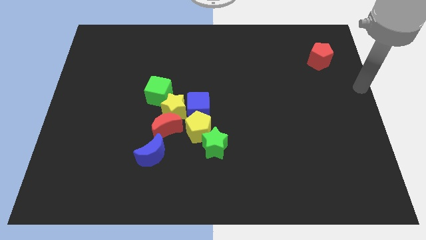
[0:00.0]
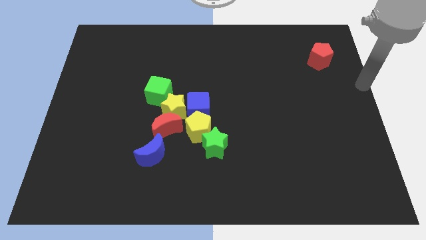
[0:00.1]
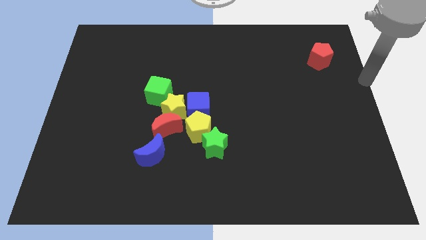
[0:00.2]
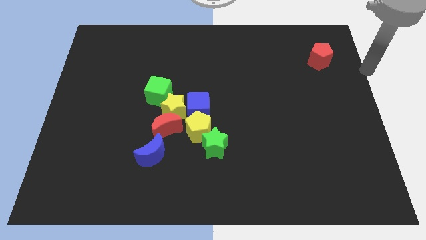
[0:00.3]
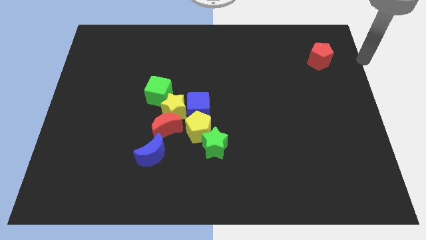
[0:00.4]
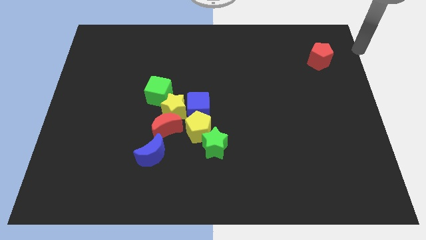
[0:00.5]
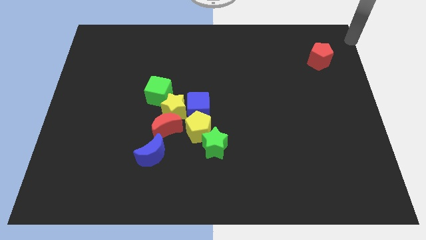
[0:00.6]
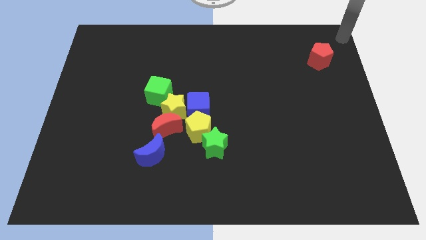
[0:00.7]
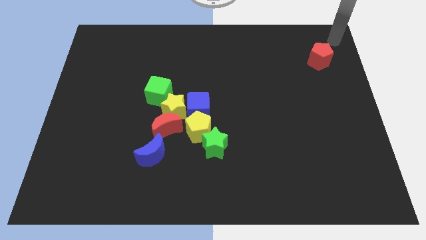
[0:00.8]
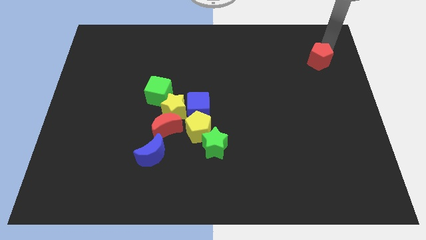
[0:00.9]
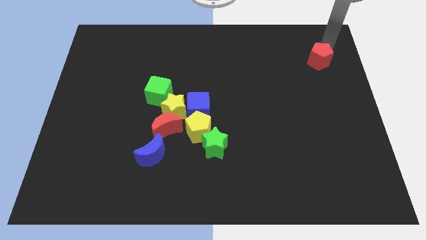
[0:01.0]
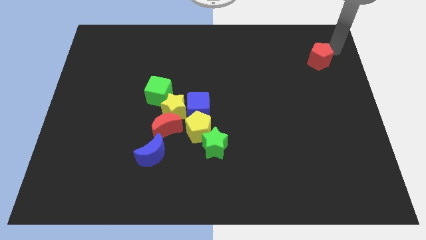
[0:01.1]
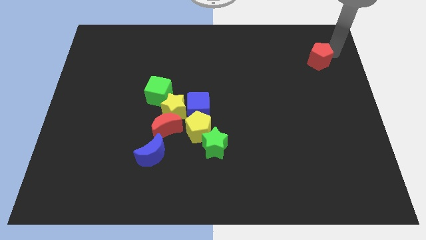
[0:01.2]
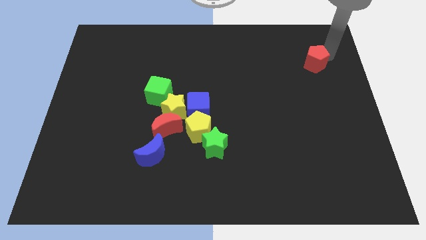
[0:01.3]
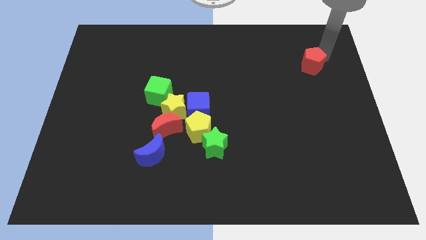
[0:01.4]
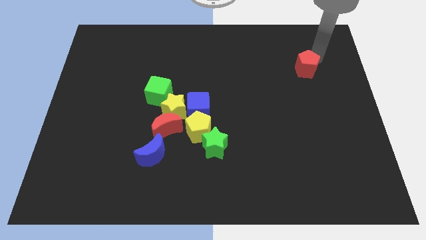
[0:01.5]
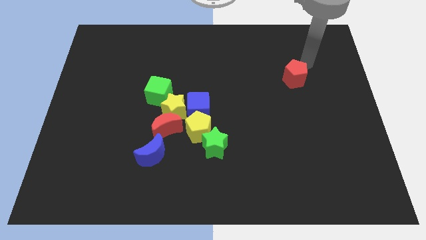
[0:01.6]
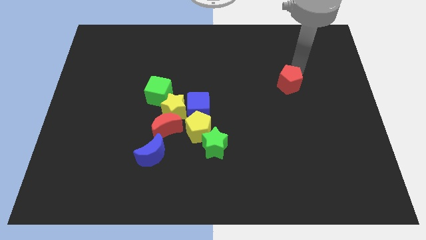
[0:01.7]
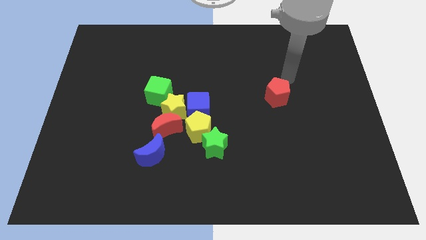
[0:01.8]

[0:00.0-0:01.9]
move the red pentagon towards the other blocks

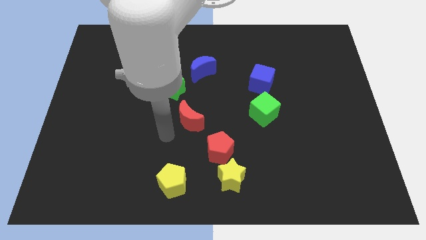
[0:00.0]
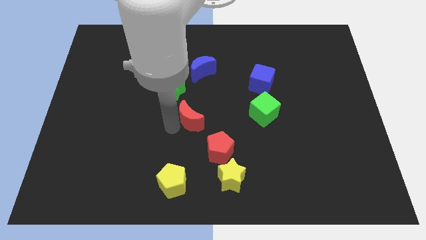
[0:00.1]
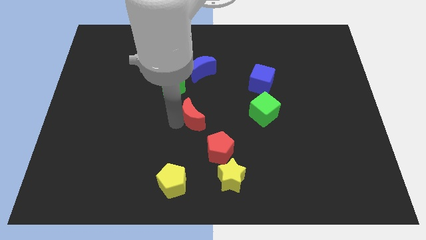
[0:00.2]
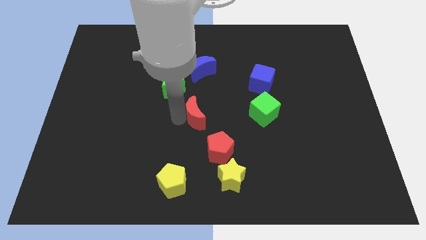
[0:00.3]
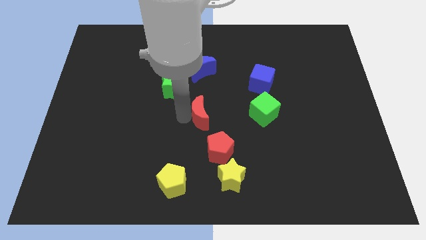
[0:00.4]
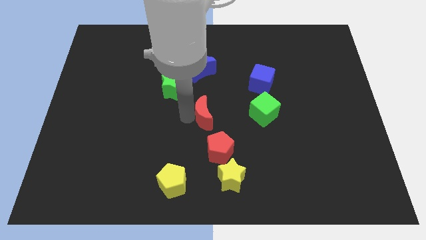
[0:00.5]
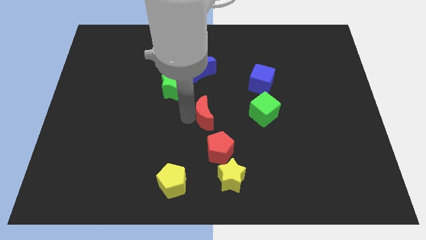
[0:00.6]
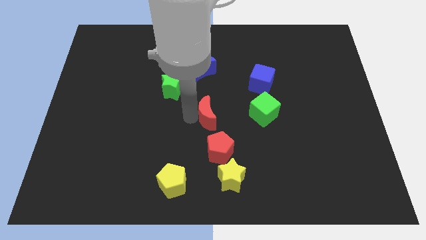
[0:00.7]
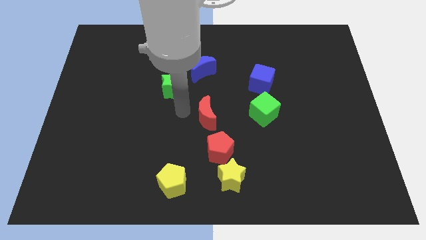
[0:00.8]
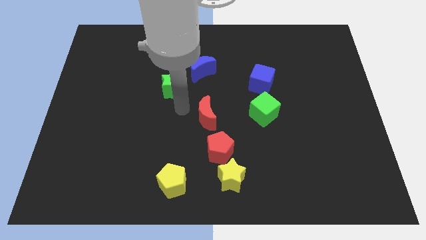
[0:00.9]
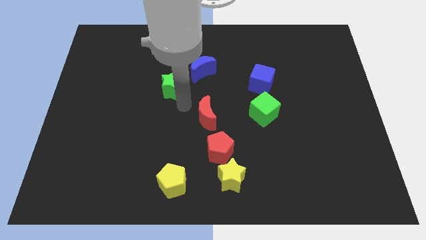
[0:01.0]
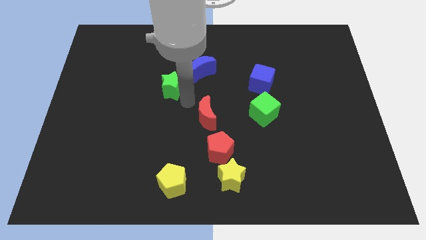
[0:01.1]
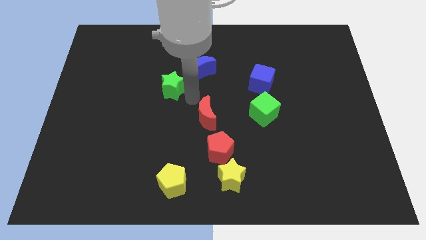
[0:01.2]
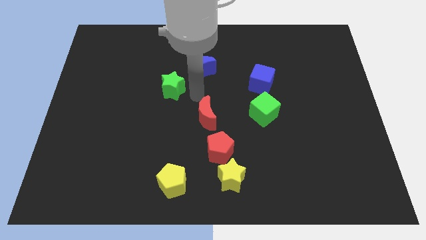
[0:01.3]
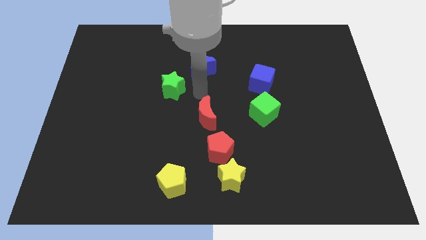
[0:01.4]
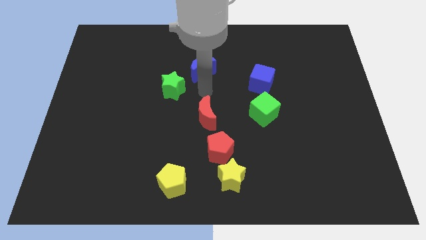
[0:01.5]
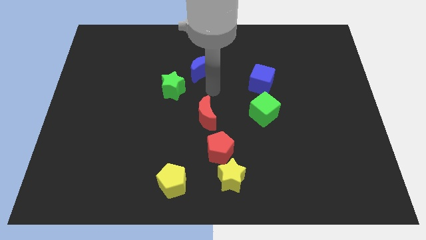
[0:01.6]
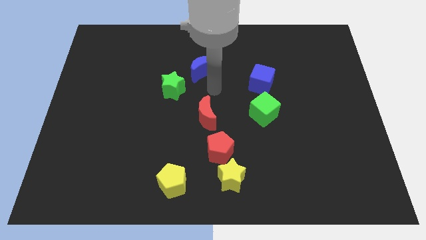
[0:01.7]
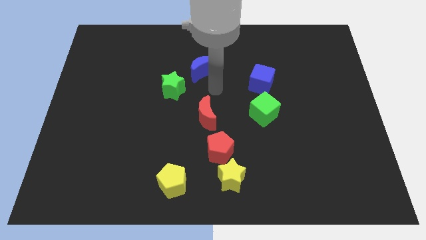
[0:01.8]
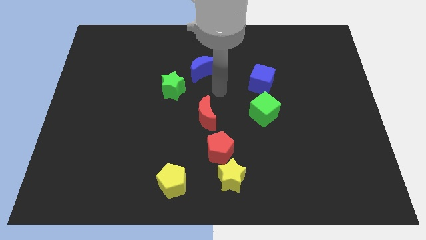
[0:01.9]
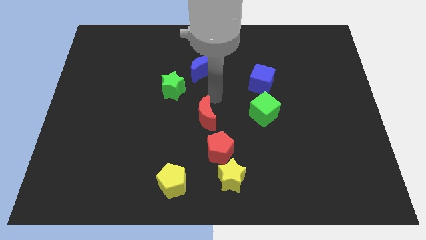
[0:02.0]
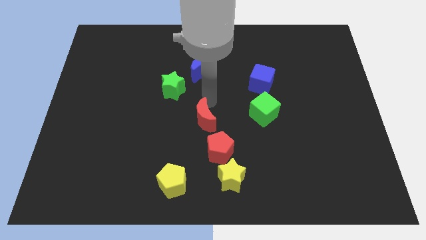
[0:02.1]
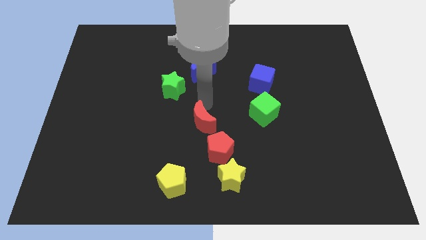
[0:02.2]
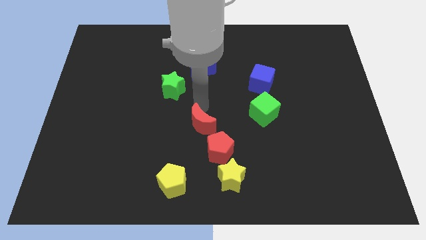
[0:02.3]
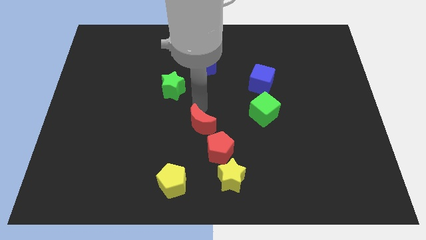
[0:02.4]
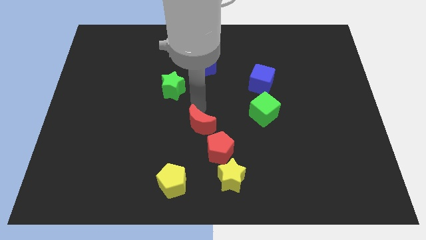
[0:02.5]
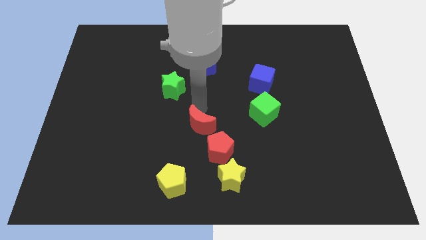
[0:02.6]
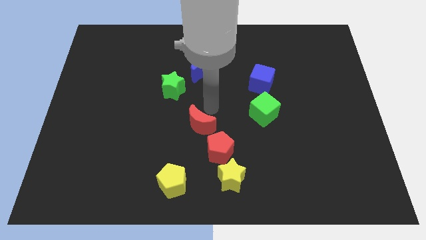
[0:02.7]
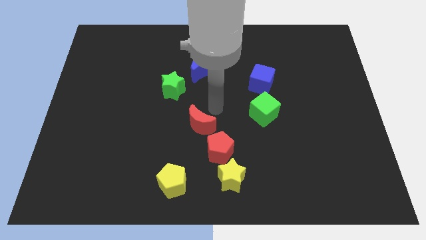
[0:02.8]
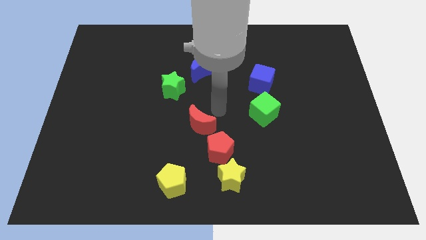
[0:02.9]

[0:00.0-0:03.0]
place the red crescent close to red pentagon

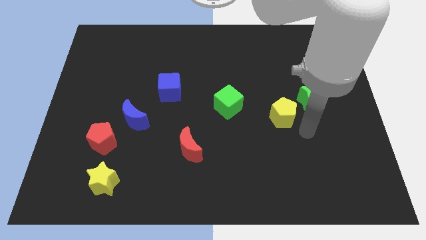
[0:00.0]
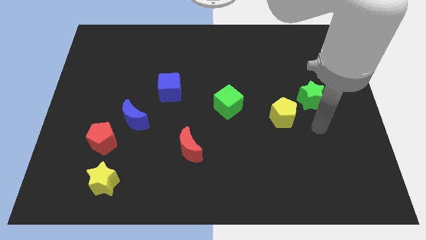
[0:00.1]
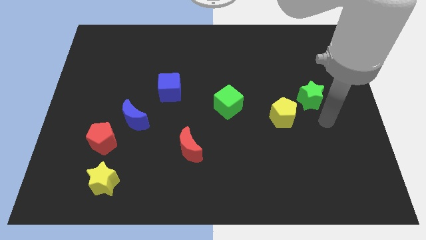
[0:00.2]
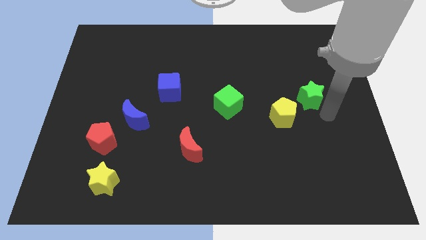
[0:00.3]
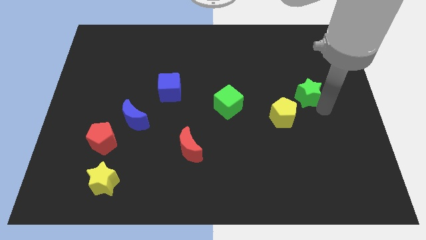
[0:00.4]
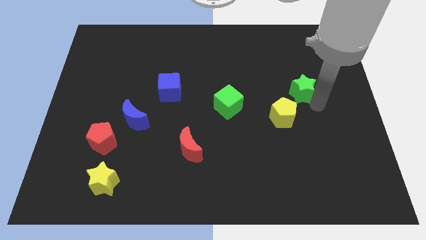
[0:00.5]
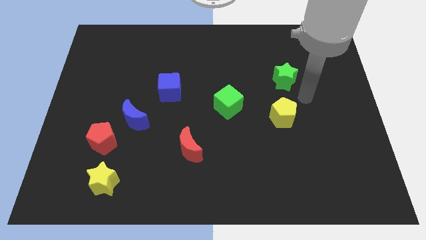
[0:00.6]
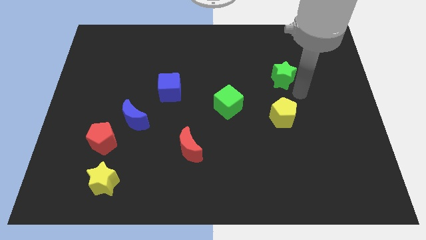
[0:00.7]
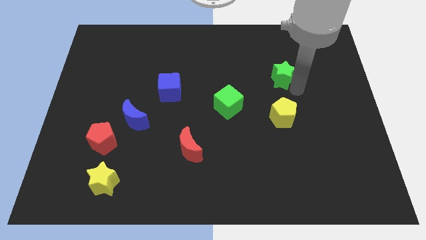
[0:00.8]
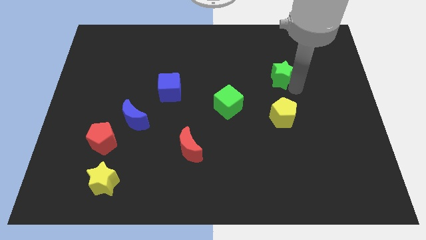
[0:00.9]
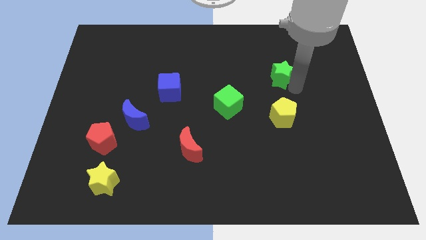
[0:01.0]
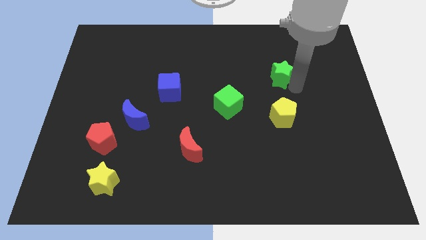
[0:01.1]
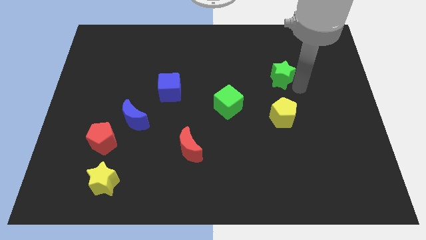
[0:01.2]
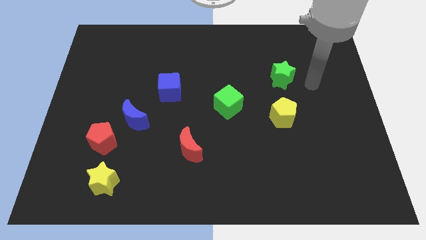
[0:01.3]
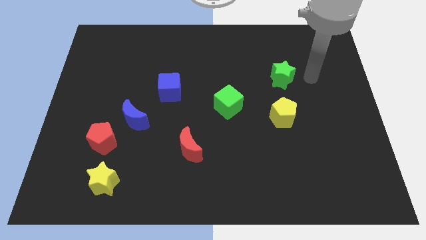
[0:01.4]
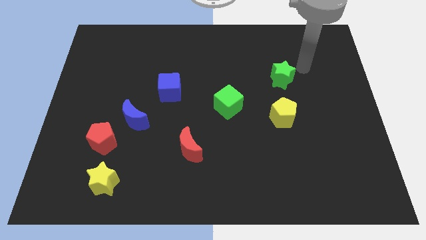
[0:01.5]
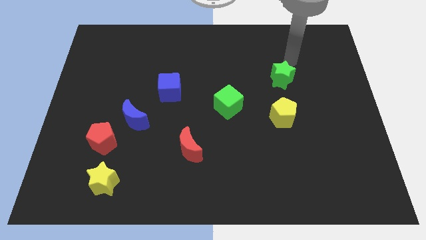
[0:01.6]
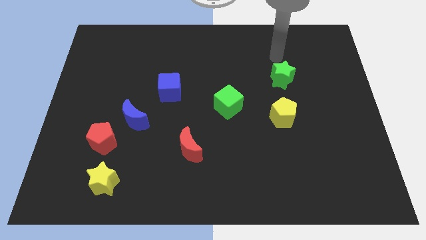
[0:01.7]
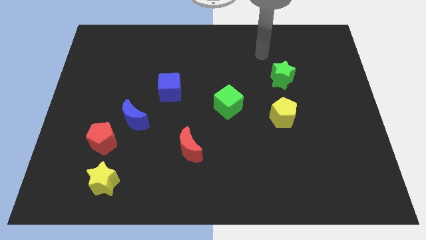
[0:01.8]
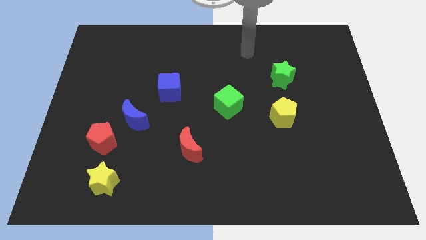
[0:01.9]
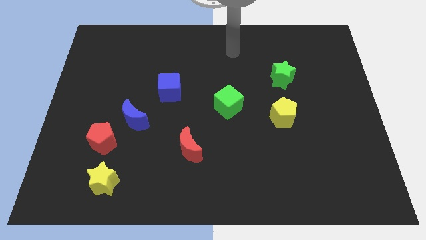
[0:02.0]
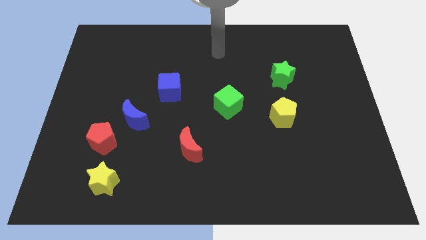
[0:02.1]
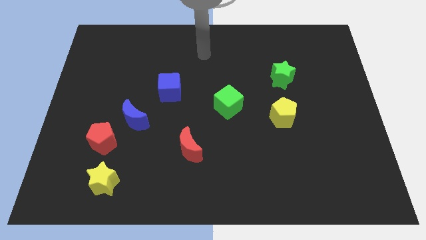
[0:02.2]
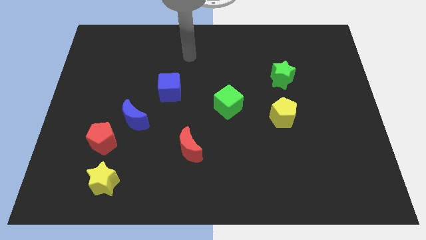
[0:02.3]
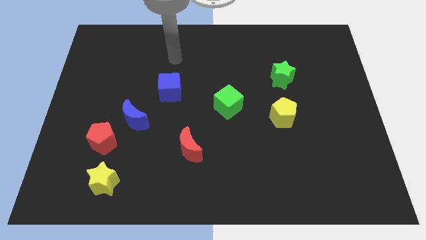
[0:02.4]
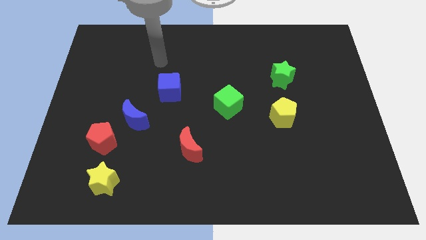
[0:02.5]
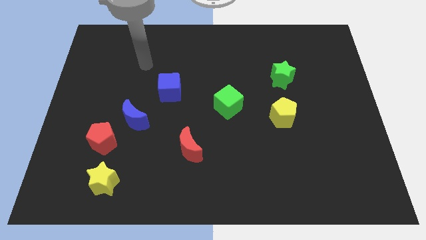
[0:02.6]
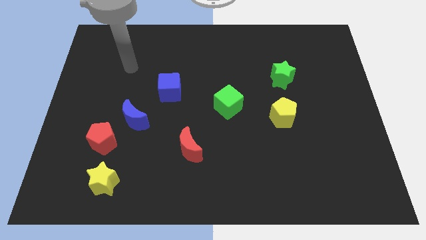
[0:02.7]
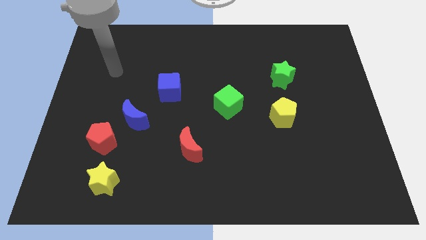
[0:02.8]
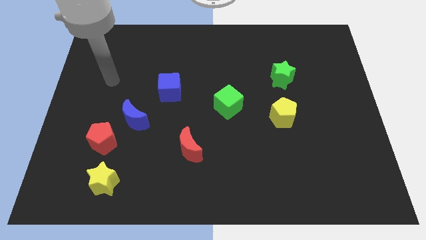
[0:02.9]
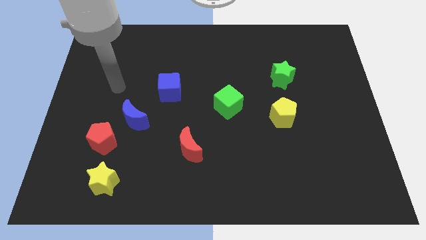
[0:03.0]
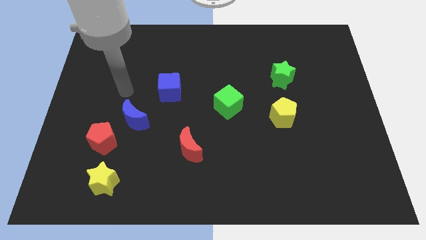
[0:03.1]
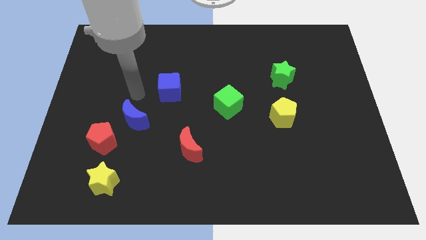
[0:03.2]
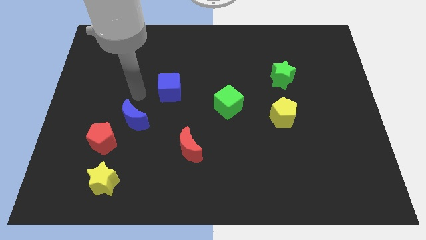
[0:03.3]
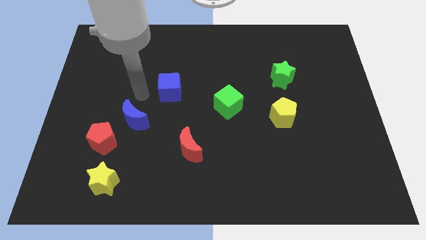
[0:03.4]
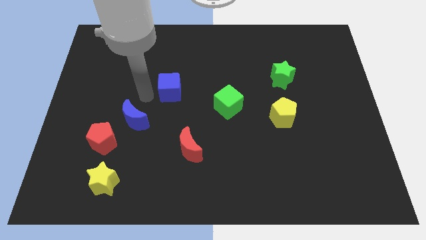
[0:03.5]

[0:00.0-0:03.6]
push the green star to the vertical top side of the yellow pentagon

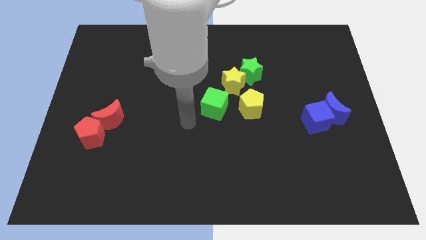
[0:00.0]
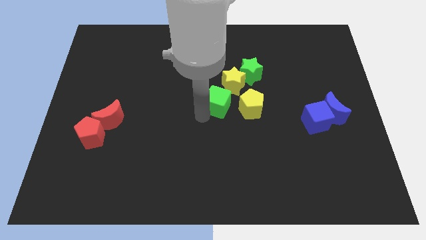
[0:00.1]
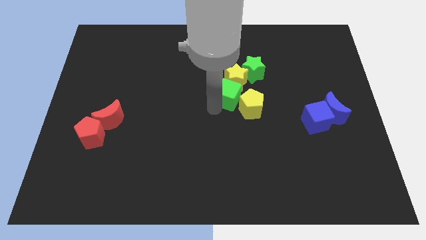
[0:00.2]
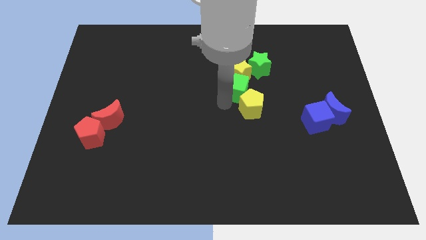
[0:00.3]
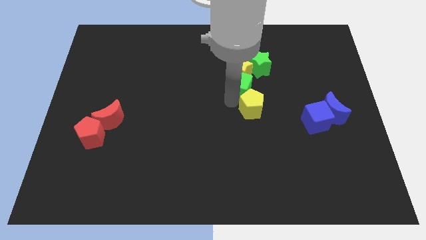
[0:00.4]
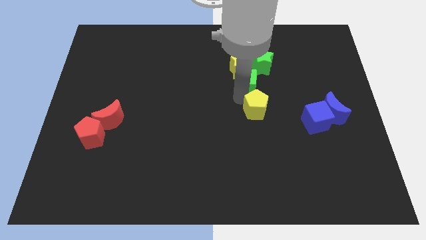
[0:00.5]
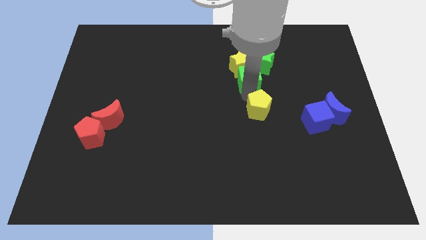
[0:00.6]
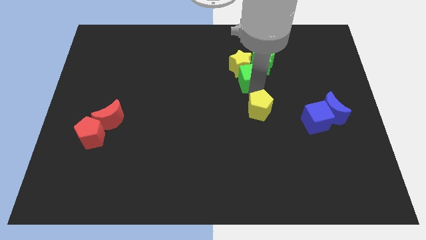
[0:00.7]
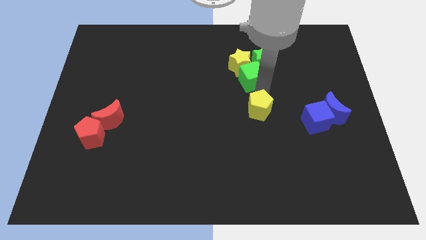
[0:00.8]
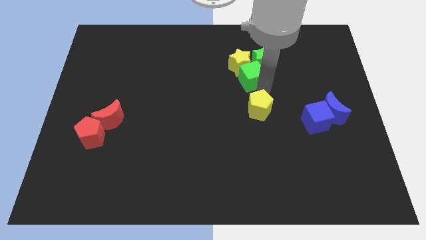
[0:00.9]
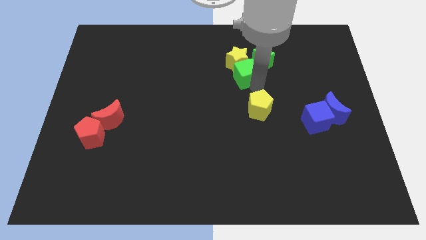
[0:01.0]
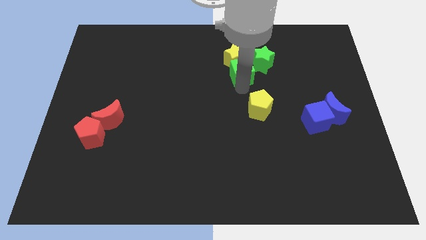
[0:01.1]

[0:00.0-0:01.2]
push a group of blocks upward
